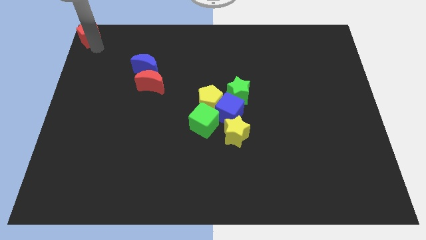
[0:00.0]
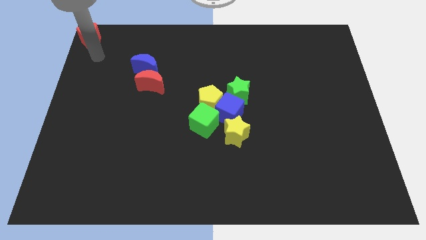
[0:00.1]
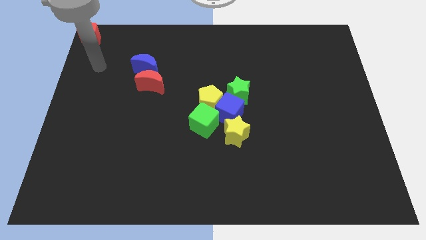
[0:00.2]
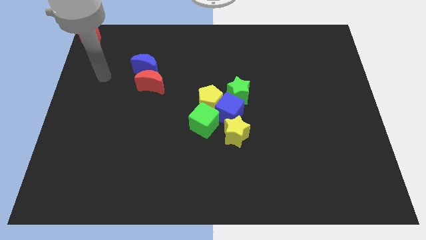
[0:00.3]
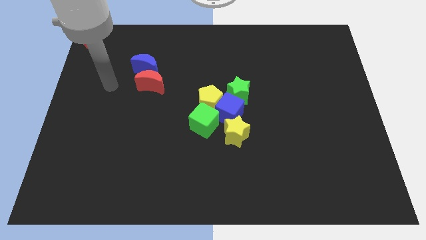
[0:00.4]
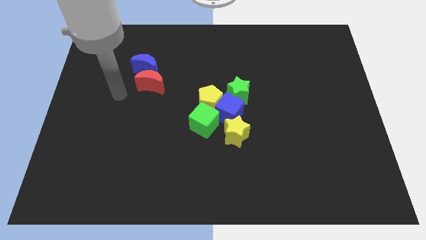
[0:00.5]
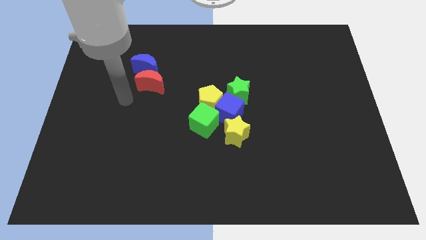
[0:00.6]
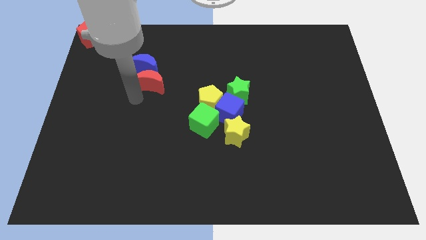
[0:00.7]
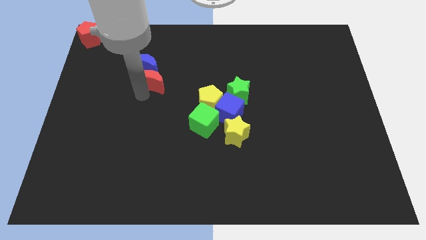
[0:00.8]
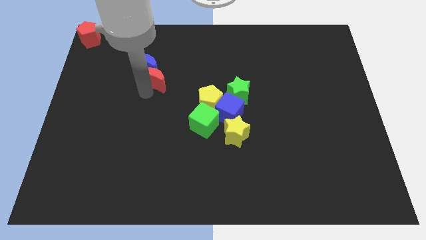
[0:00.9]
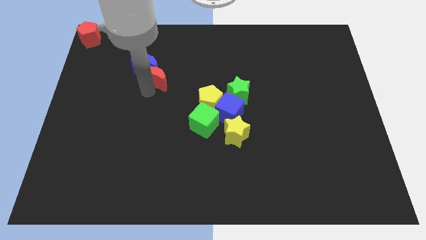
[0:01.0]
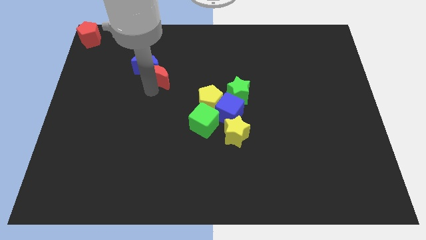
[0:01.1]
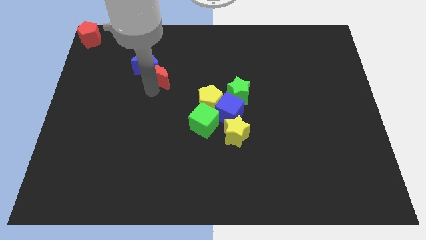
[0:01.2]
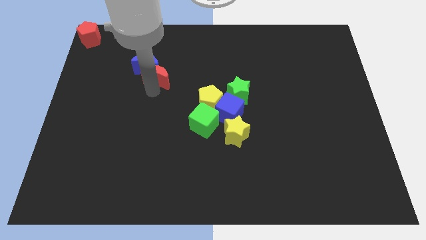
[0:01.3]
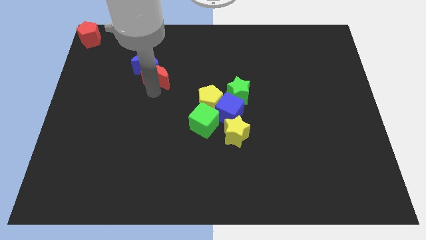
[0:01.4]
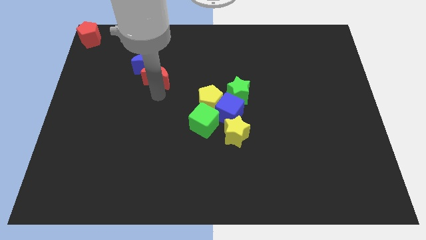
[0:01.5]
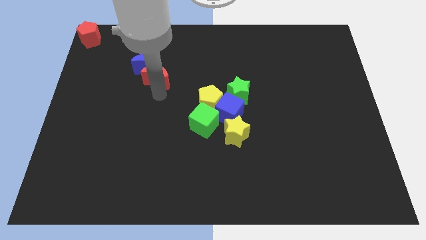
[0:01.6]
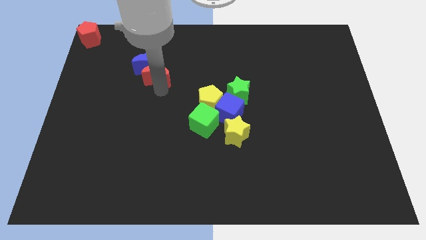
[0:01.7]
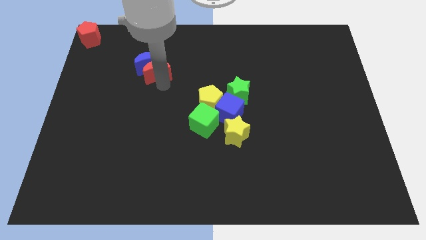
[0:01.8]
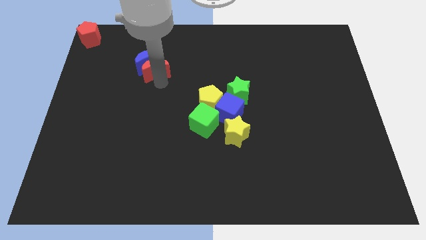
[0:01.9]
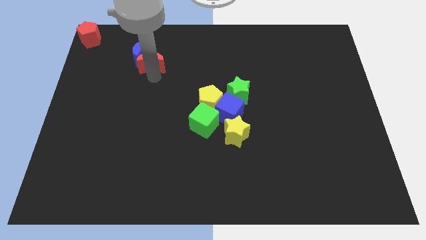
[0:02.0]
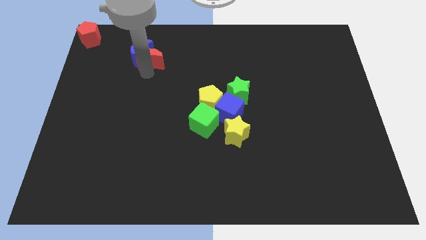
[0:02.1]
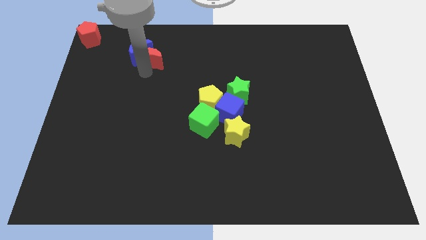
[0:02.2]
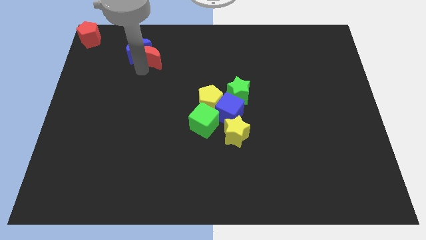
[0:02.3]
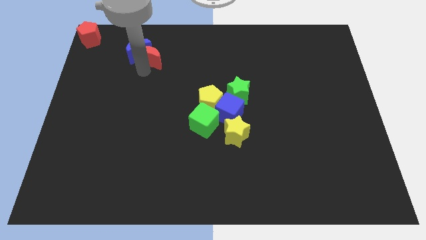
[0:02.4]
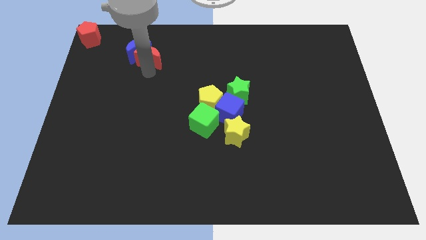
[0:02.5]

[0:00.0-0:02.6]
move the blue crescent in to red crescent

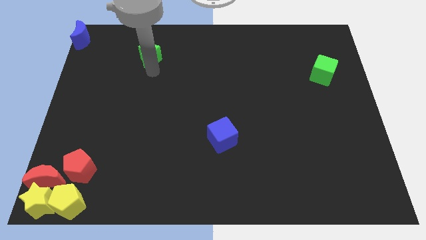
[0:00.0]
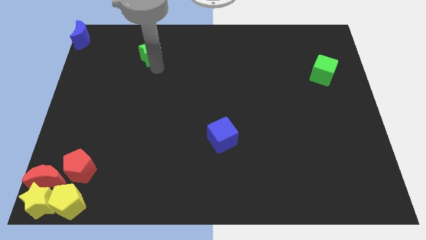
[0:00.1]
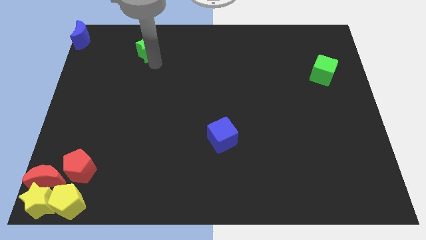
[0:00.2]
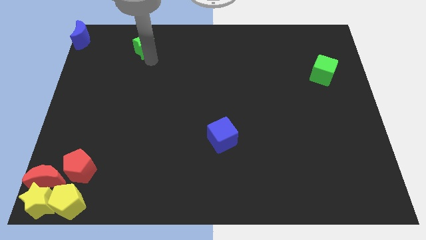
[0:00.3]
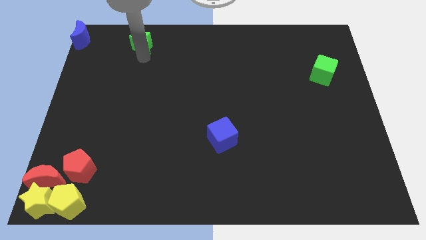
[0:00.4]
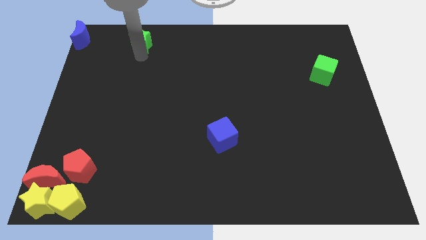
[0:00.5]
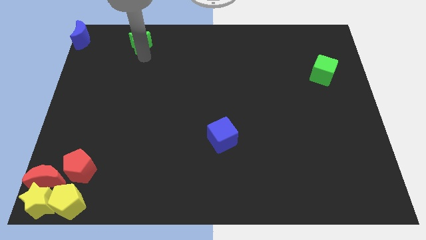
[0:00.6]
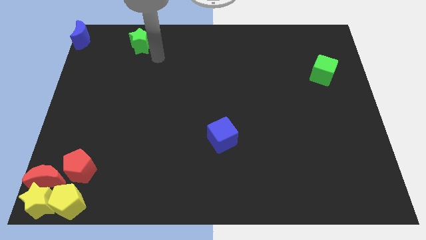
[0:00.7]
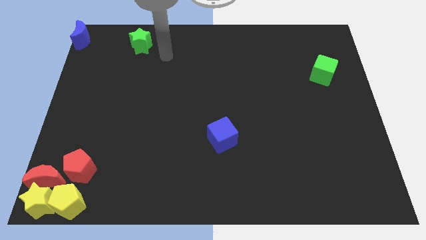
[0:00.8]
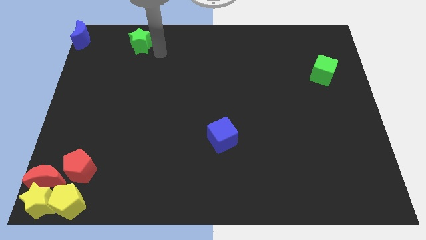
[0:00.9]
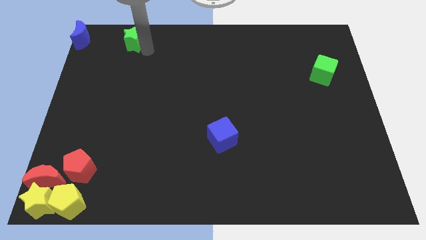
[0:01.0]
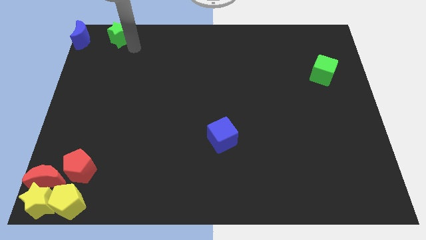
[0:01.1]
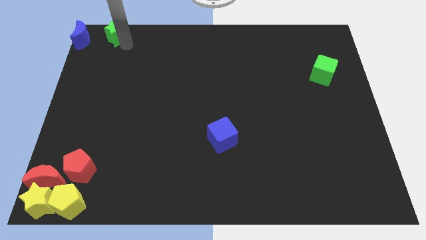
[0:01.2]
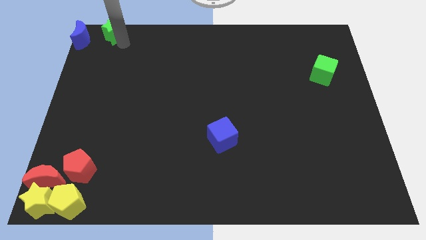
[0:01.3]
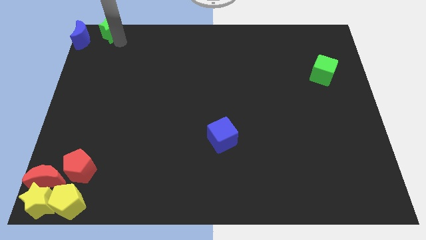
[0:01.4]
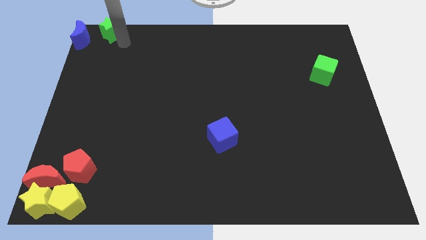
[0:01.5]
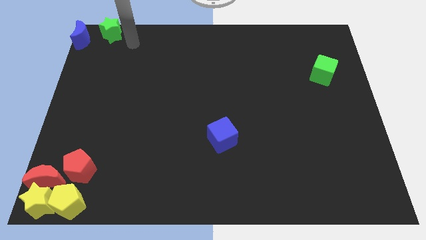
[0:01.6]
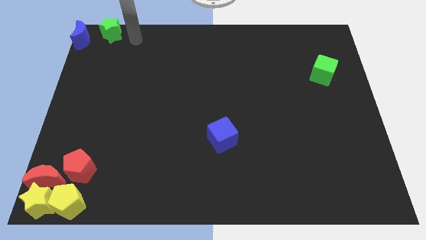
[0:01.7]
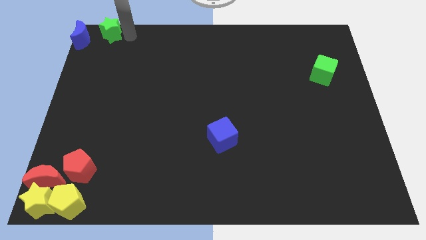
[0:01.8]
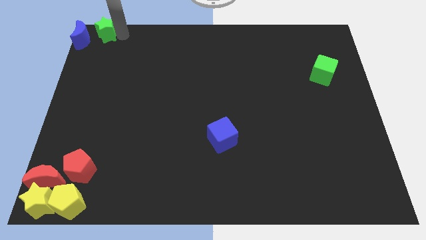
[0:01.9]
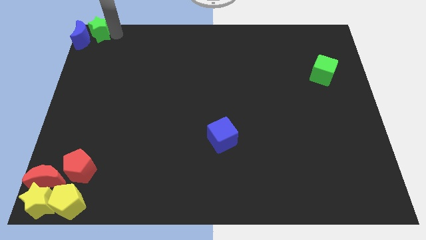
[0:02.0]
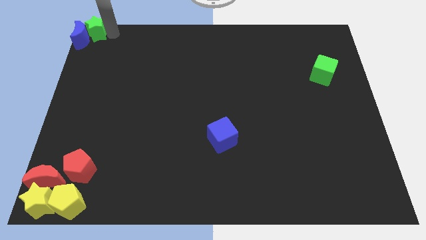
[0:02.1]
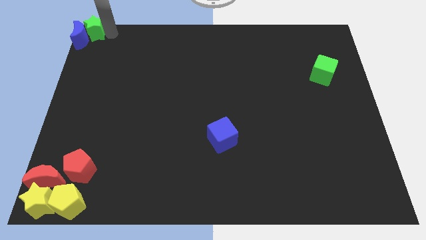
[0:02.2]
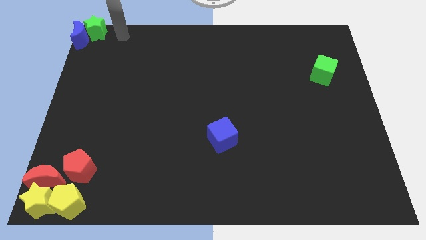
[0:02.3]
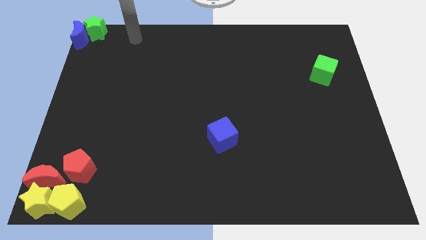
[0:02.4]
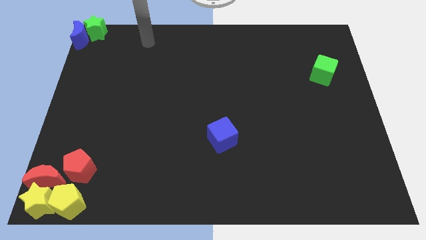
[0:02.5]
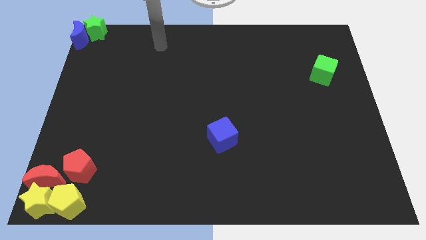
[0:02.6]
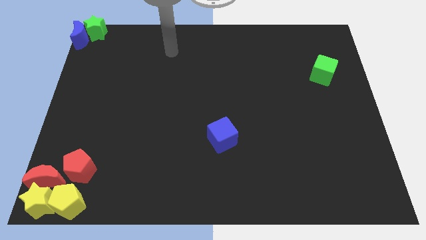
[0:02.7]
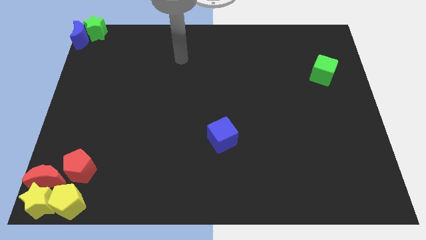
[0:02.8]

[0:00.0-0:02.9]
push the green star right to the blue crescent

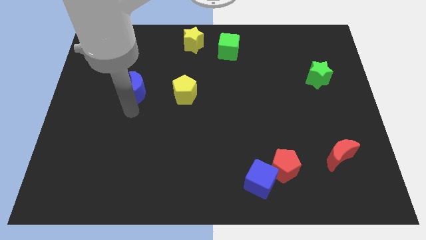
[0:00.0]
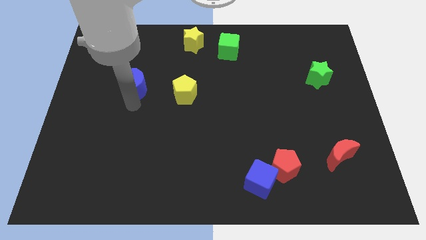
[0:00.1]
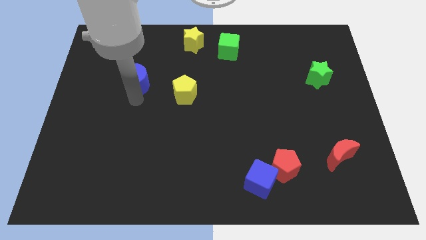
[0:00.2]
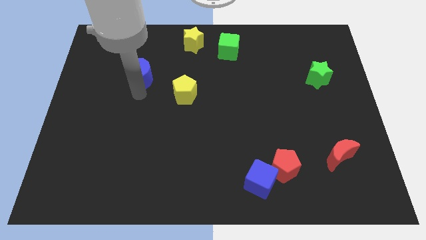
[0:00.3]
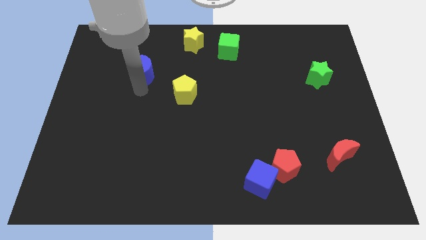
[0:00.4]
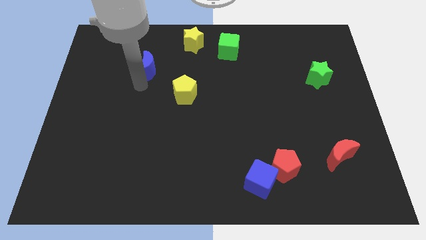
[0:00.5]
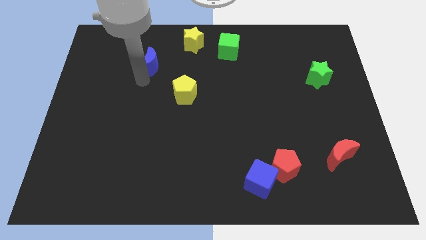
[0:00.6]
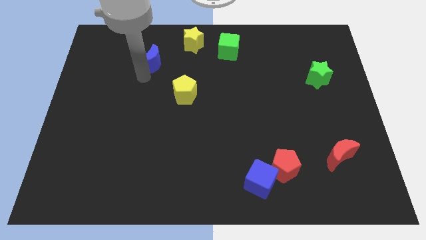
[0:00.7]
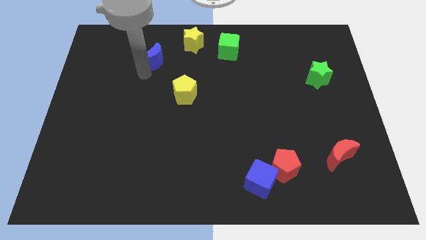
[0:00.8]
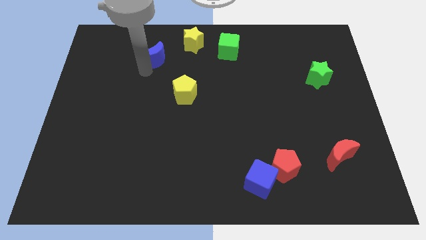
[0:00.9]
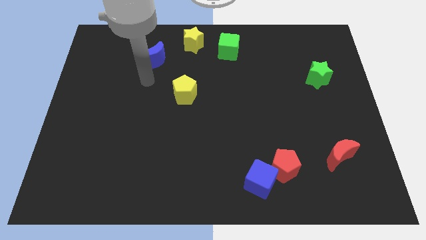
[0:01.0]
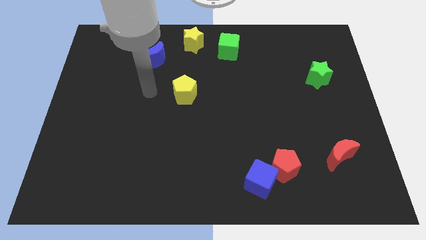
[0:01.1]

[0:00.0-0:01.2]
slide the blue moon diagonally top left to the yellow pentagon

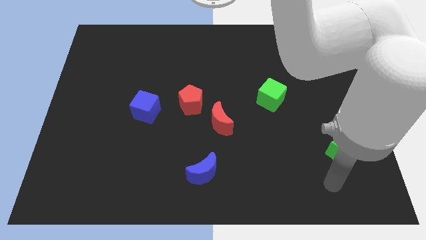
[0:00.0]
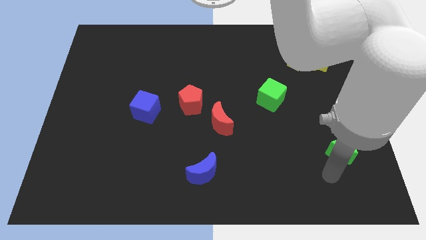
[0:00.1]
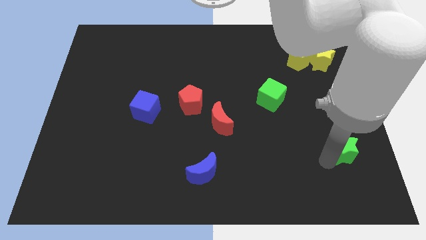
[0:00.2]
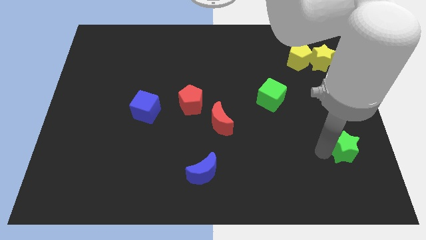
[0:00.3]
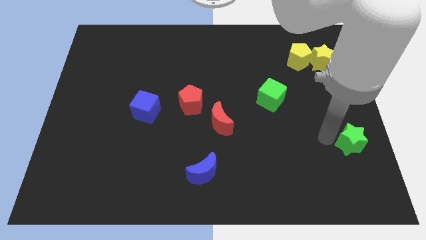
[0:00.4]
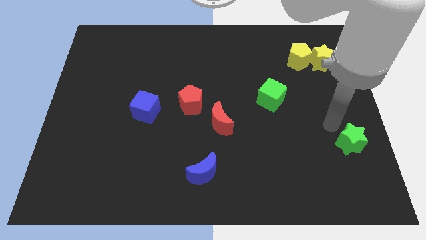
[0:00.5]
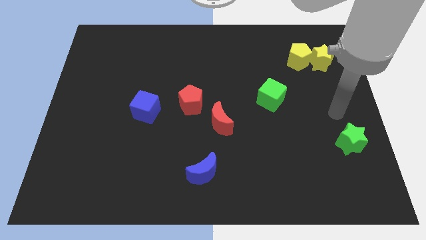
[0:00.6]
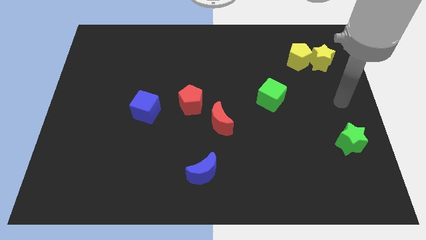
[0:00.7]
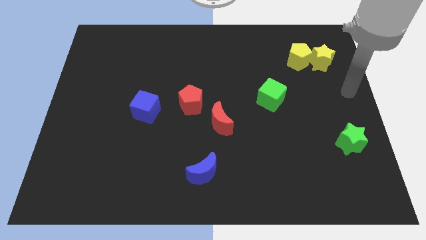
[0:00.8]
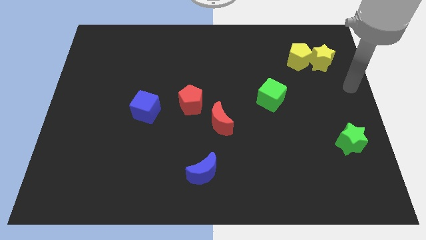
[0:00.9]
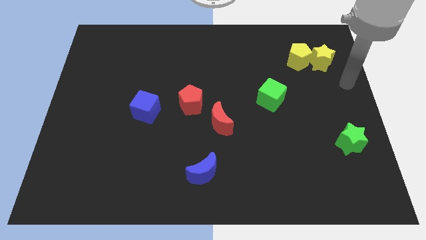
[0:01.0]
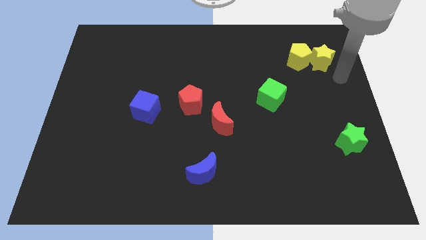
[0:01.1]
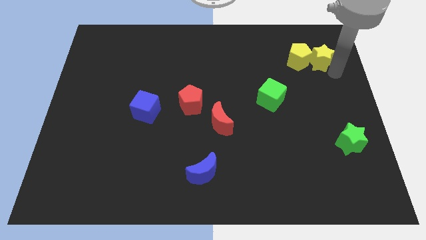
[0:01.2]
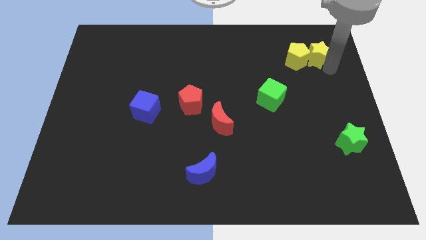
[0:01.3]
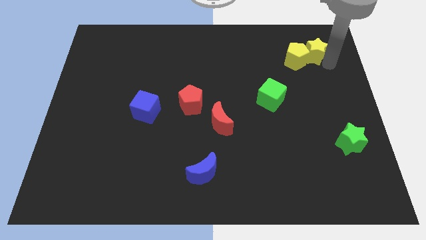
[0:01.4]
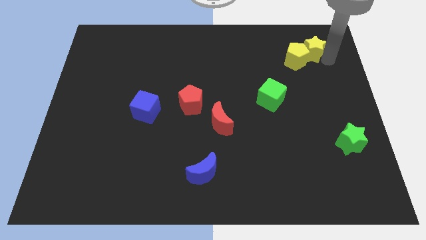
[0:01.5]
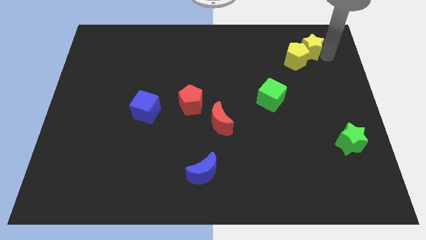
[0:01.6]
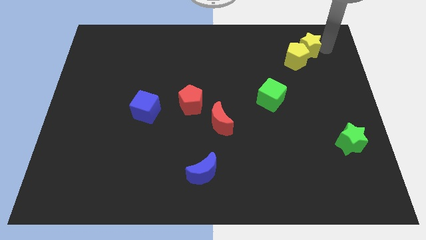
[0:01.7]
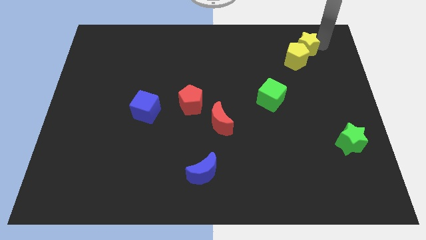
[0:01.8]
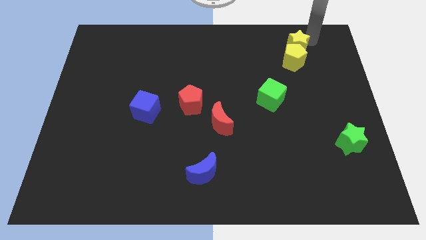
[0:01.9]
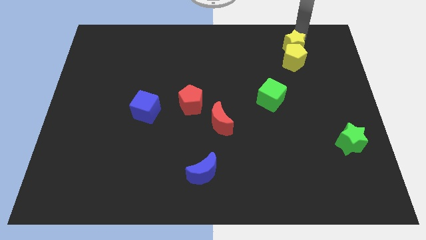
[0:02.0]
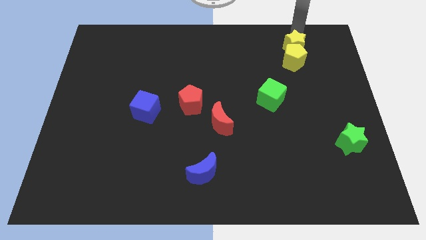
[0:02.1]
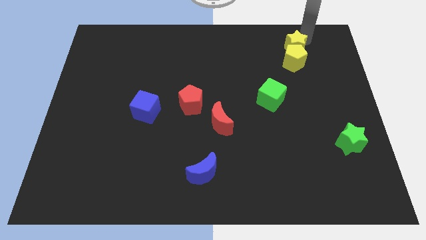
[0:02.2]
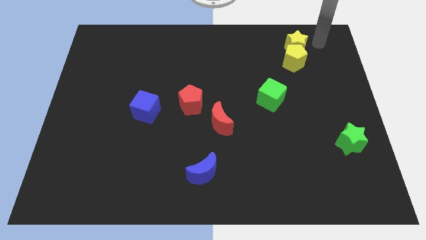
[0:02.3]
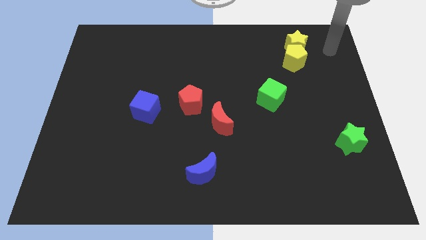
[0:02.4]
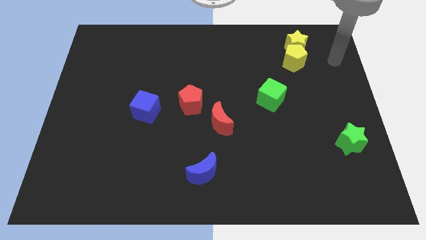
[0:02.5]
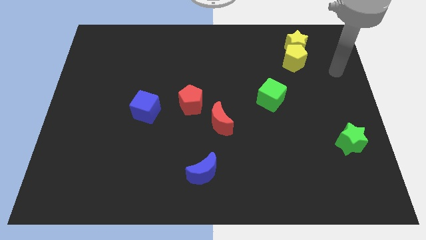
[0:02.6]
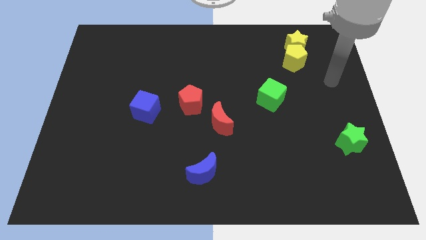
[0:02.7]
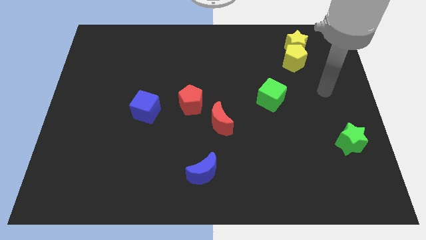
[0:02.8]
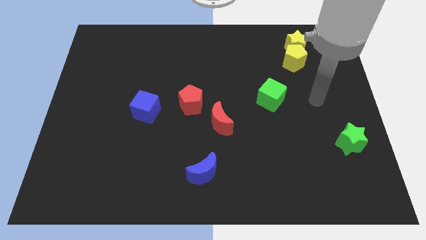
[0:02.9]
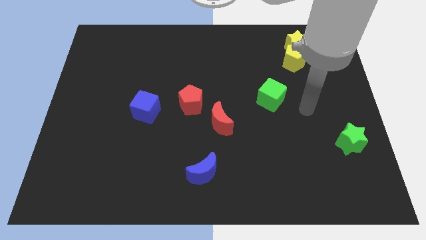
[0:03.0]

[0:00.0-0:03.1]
place the yellow star vertically above the yellow pentagon
